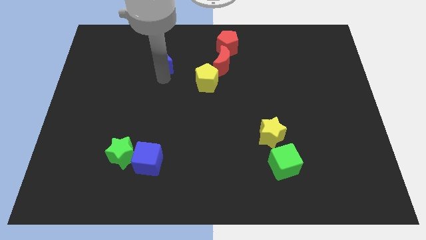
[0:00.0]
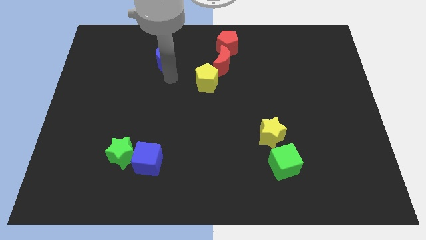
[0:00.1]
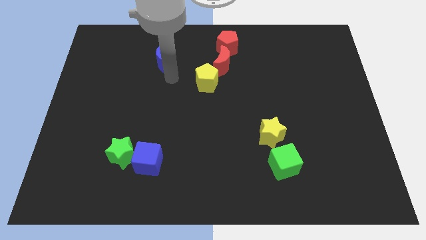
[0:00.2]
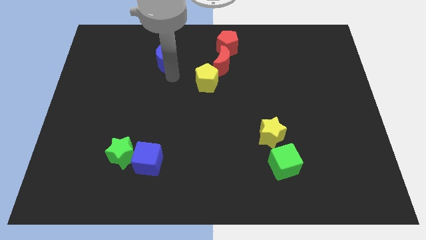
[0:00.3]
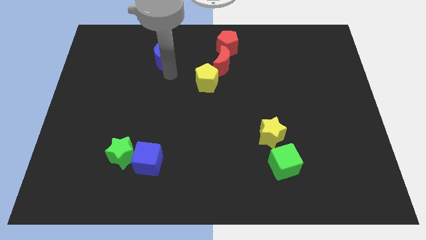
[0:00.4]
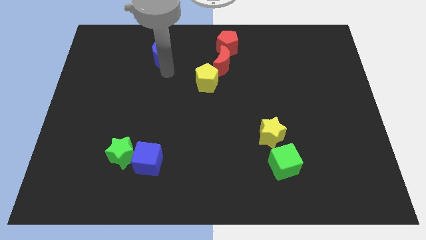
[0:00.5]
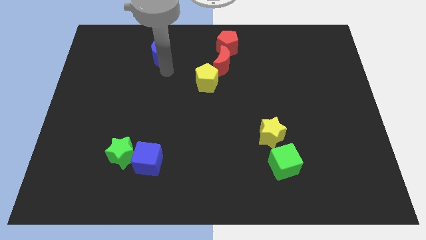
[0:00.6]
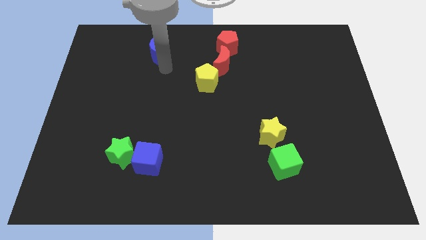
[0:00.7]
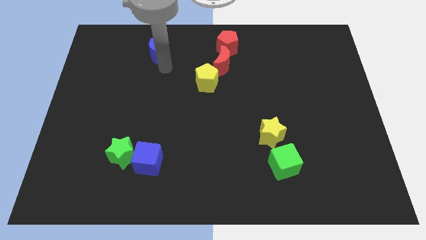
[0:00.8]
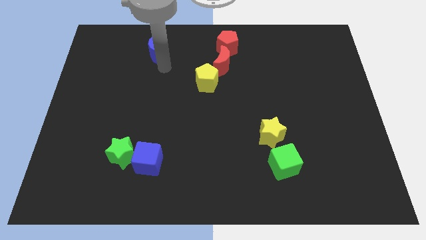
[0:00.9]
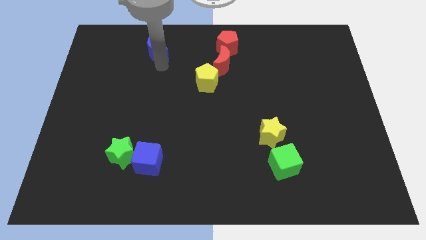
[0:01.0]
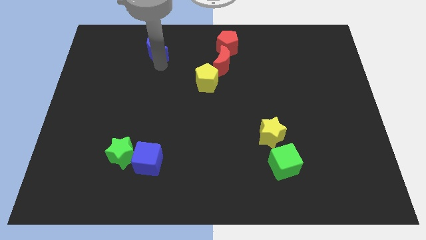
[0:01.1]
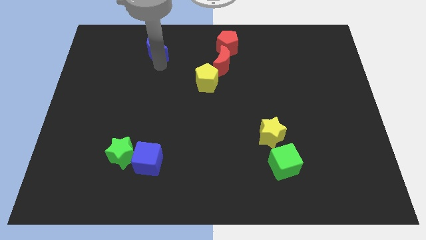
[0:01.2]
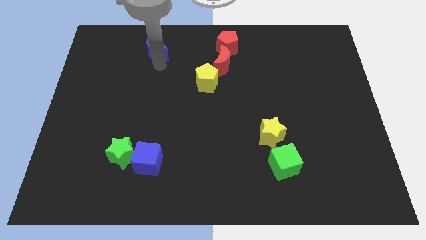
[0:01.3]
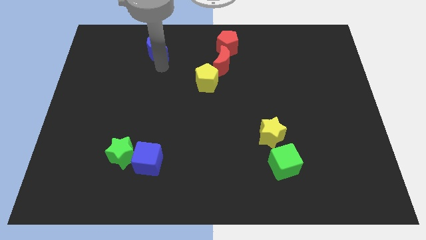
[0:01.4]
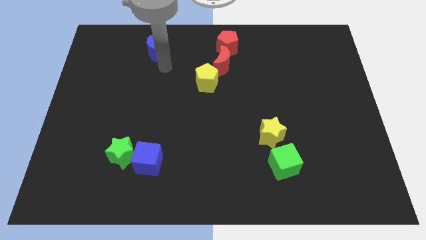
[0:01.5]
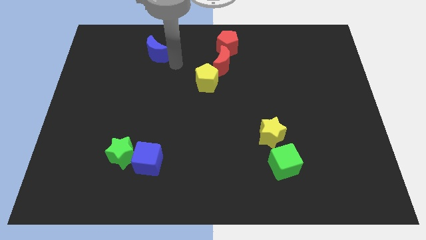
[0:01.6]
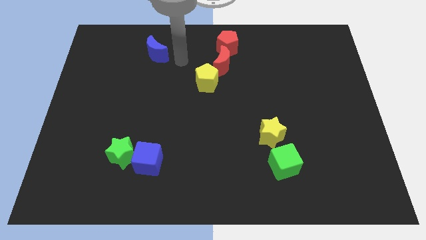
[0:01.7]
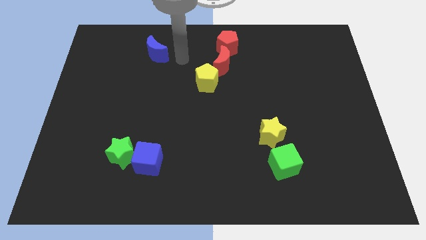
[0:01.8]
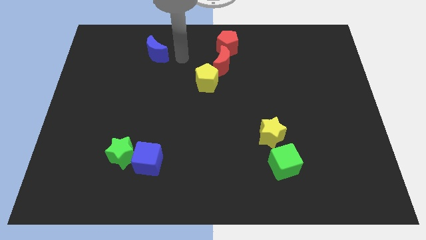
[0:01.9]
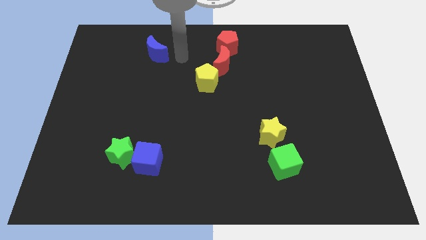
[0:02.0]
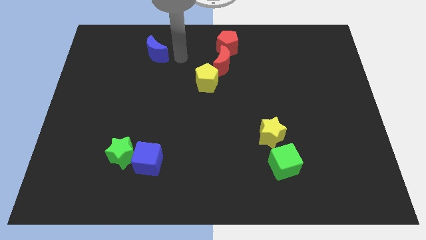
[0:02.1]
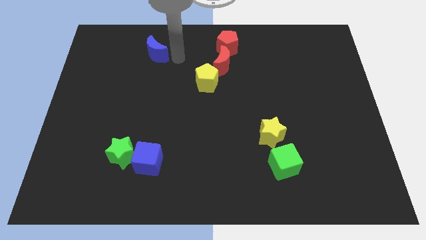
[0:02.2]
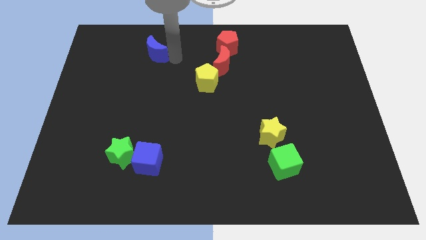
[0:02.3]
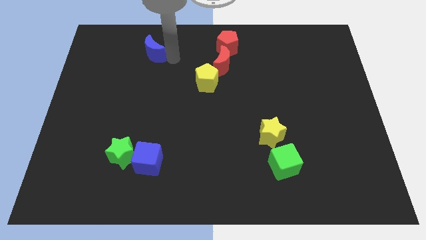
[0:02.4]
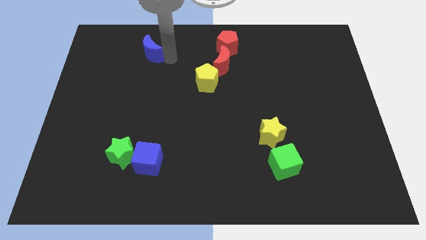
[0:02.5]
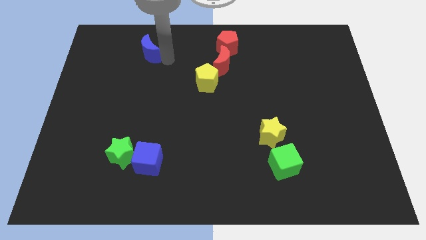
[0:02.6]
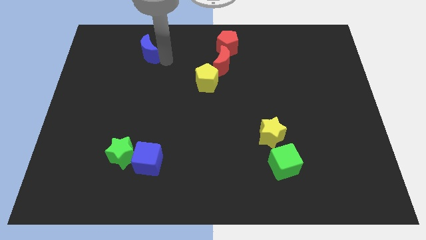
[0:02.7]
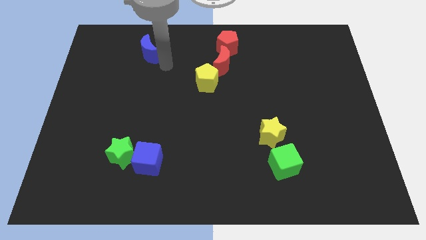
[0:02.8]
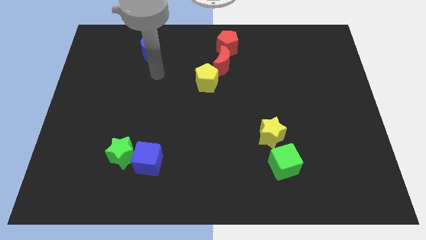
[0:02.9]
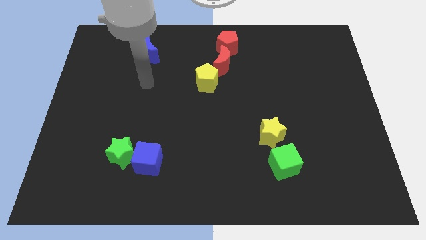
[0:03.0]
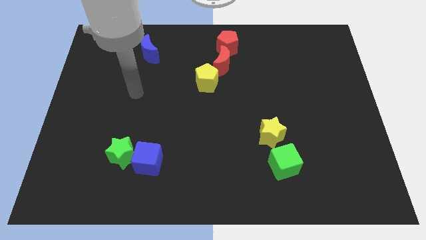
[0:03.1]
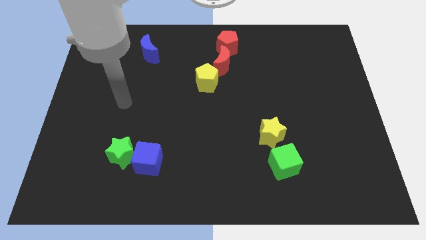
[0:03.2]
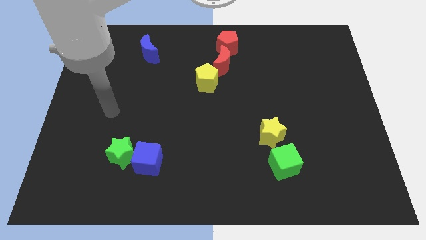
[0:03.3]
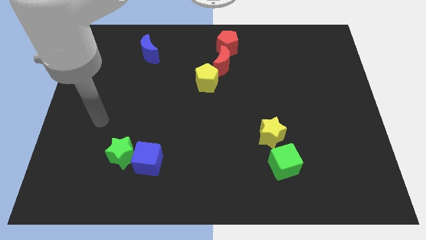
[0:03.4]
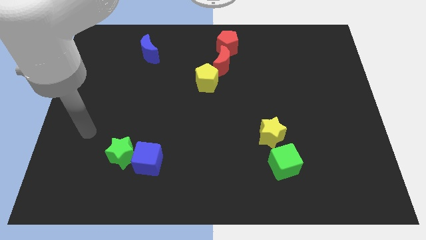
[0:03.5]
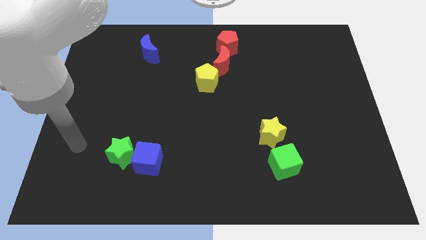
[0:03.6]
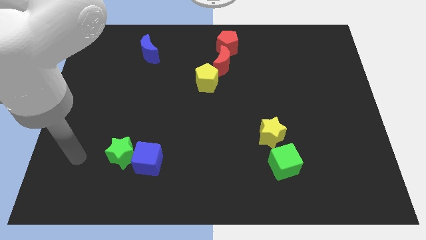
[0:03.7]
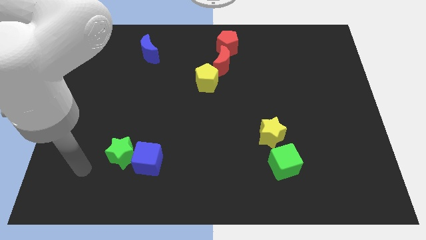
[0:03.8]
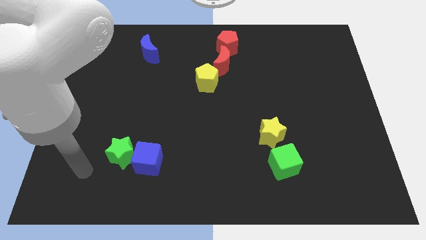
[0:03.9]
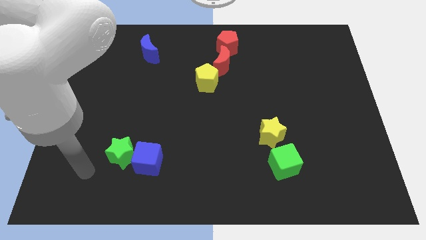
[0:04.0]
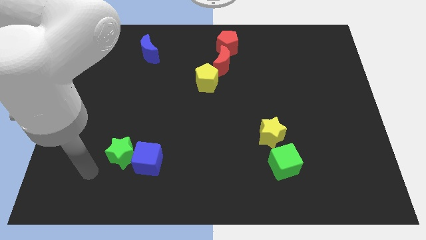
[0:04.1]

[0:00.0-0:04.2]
put the blue moon vertically above the blue cube

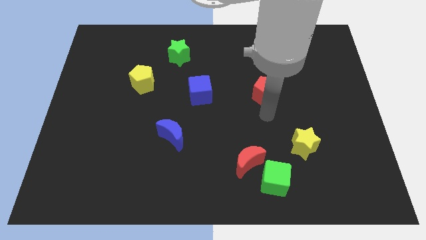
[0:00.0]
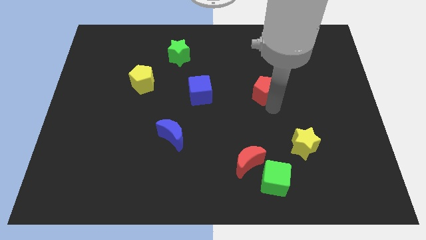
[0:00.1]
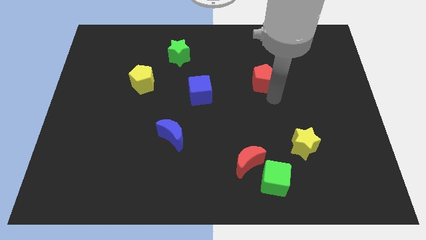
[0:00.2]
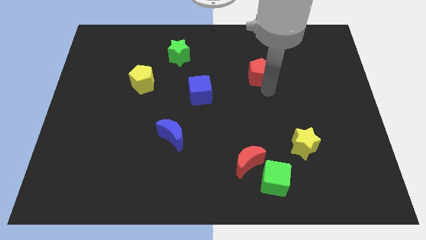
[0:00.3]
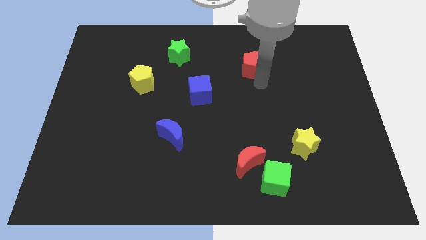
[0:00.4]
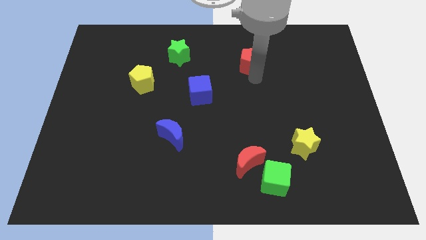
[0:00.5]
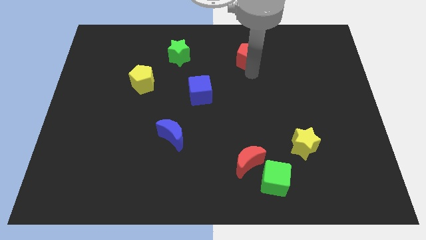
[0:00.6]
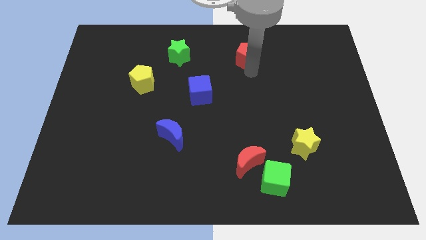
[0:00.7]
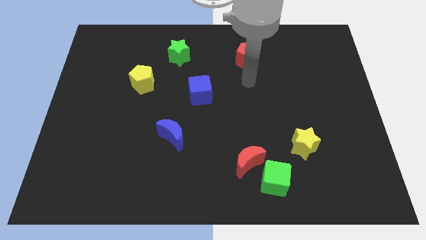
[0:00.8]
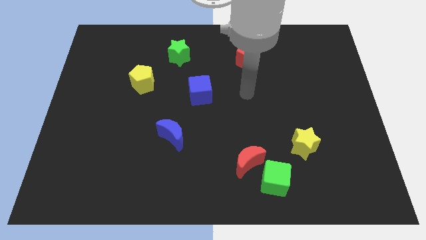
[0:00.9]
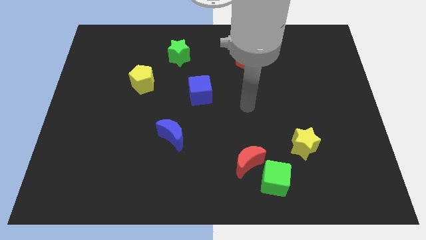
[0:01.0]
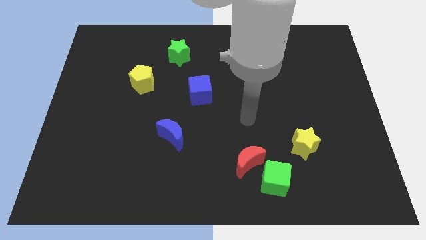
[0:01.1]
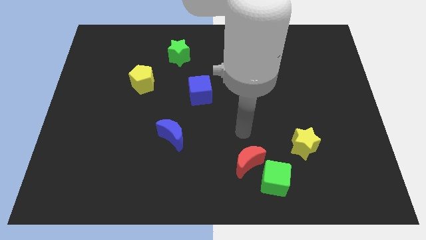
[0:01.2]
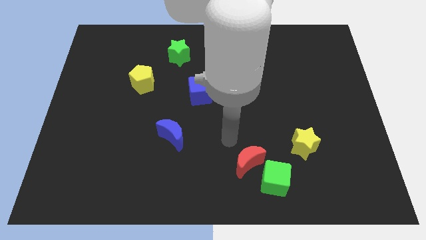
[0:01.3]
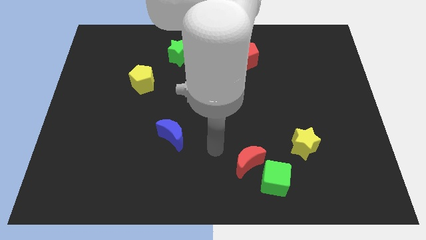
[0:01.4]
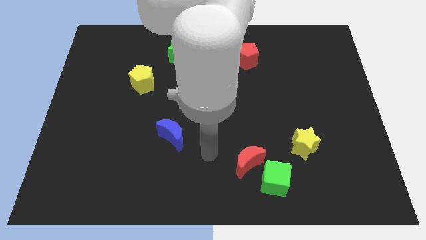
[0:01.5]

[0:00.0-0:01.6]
put the red pentagon diagonally top right to the blue cube

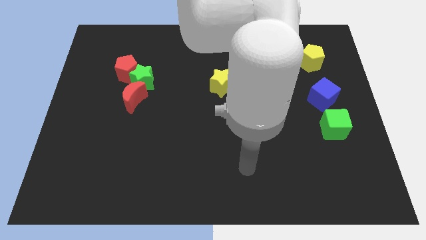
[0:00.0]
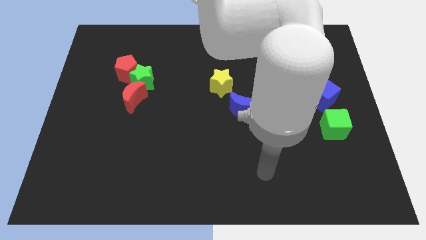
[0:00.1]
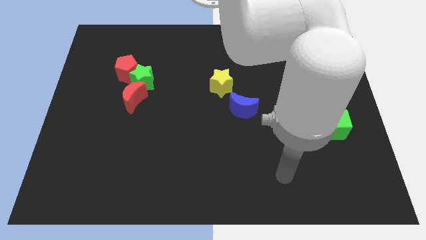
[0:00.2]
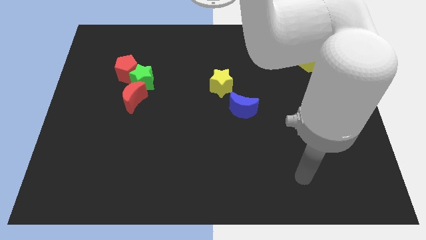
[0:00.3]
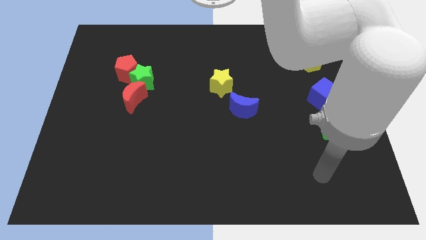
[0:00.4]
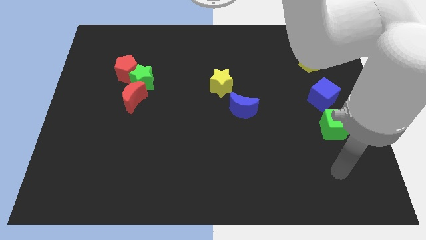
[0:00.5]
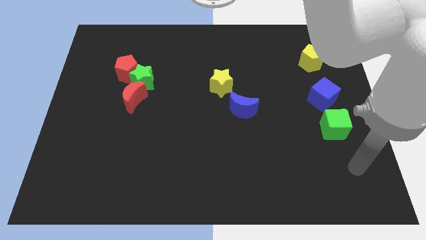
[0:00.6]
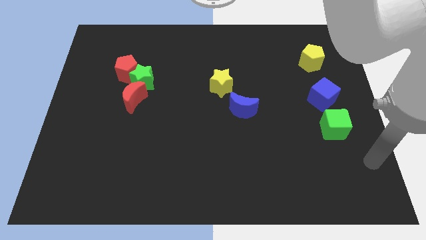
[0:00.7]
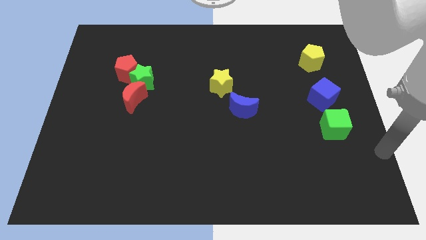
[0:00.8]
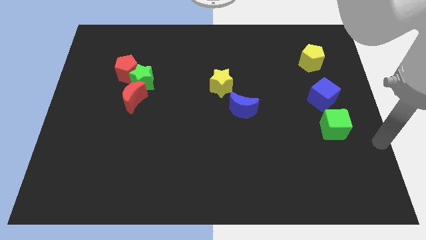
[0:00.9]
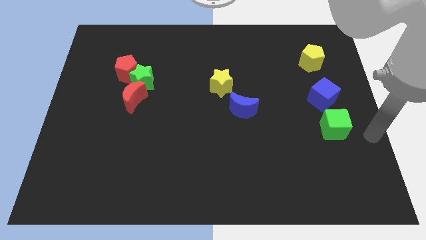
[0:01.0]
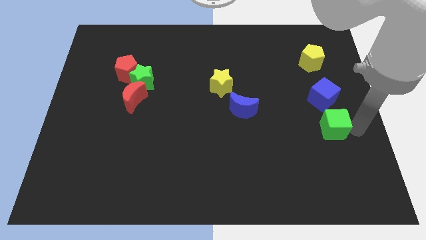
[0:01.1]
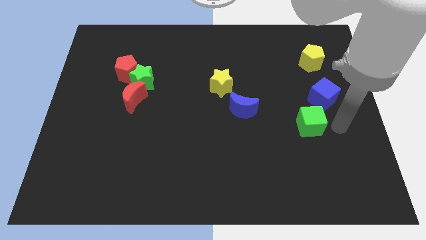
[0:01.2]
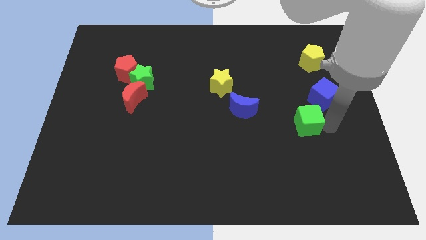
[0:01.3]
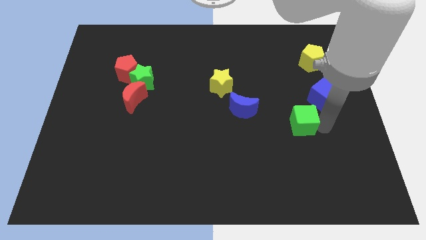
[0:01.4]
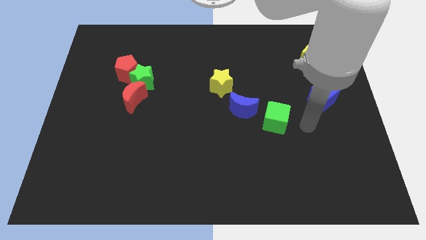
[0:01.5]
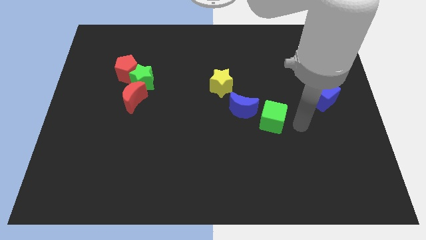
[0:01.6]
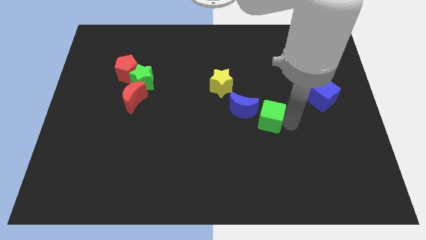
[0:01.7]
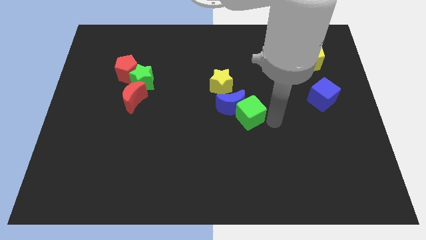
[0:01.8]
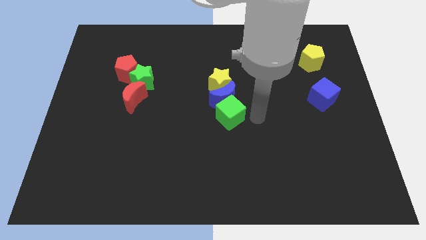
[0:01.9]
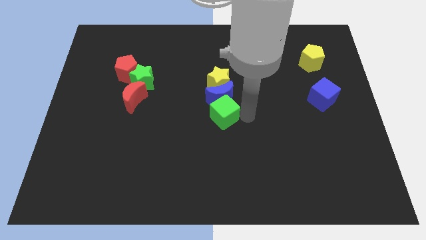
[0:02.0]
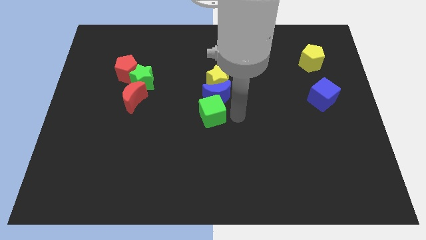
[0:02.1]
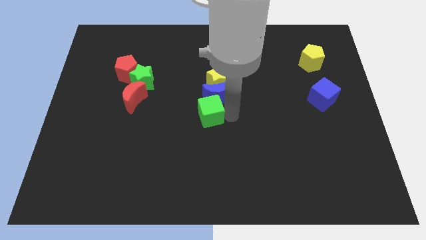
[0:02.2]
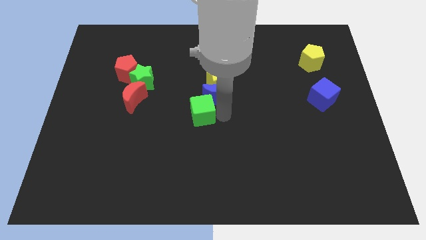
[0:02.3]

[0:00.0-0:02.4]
put the green cube towards the bottom left side of the blue crescent

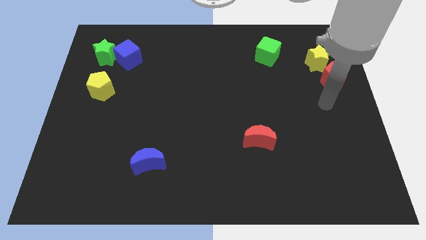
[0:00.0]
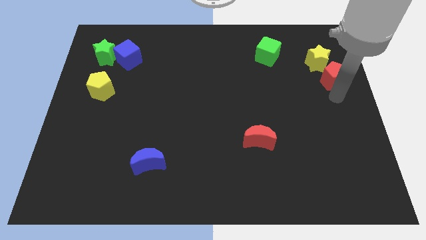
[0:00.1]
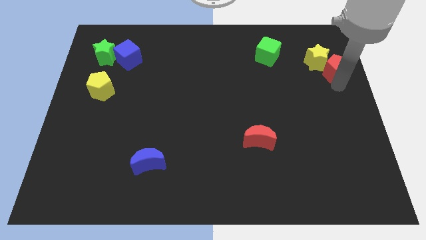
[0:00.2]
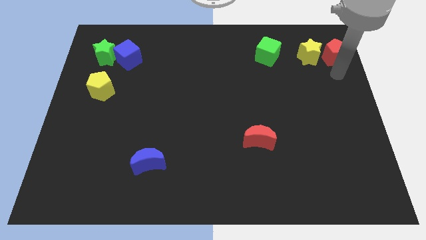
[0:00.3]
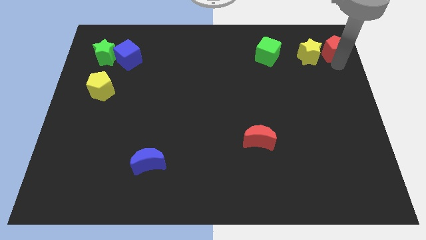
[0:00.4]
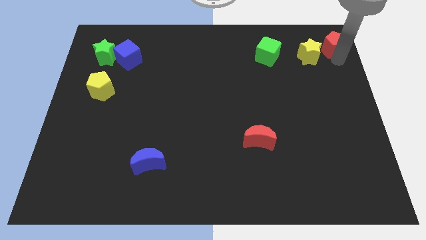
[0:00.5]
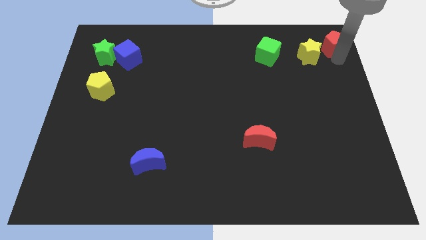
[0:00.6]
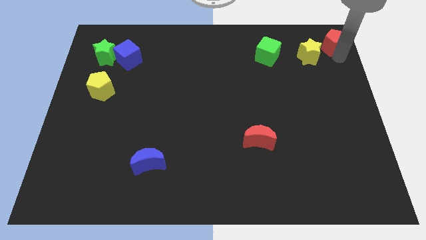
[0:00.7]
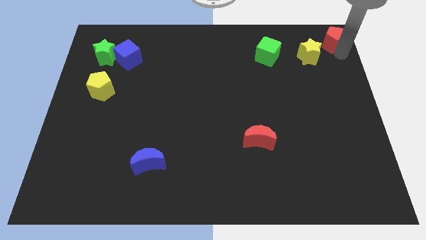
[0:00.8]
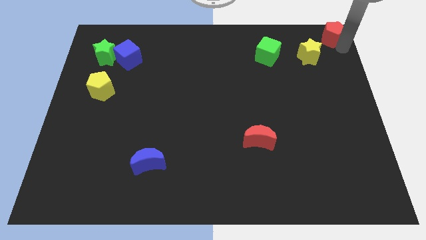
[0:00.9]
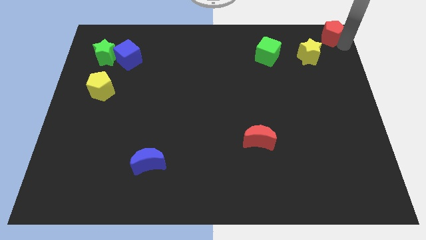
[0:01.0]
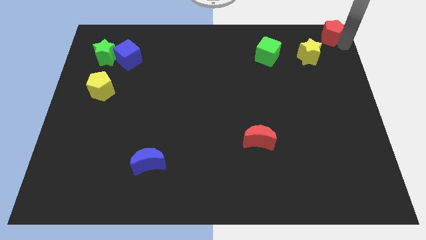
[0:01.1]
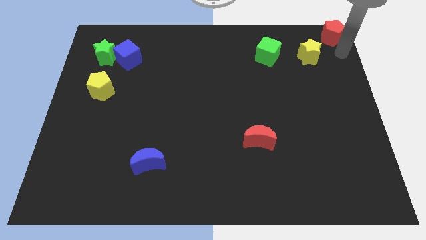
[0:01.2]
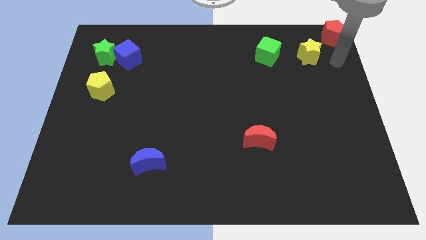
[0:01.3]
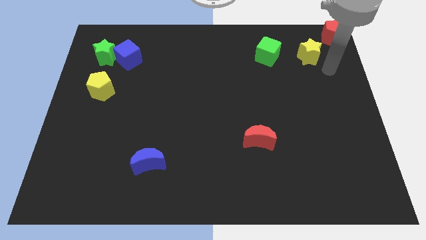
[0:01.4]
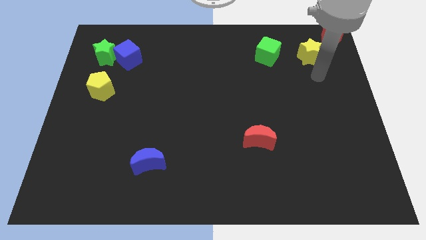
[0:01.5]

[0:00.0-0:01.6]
place the red pentagon at the top right corner of the board
